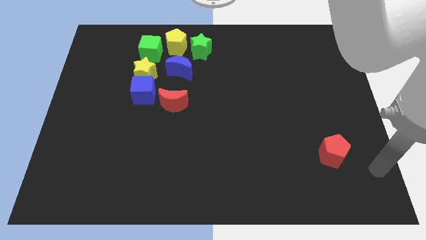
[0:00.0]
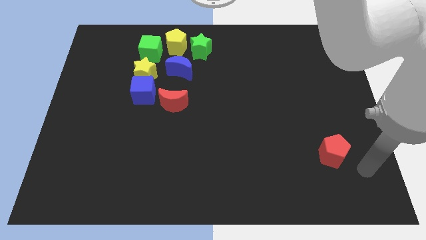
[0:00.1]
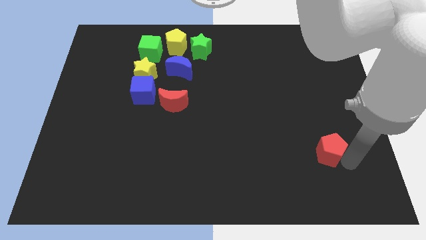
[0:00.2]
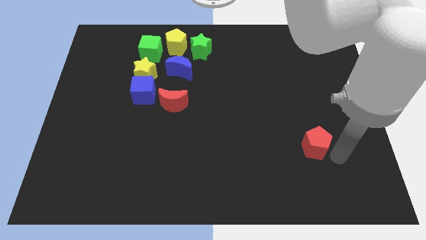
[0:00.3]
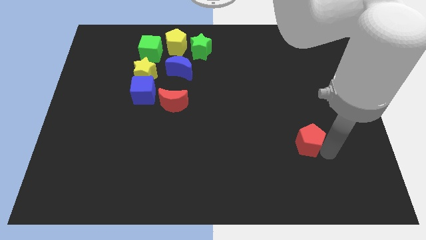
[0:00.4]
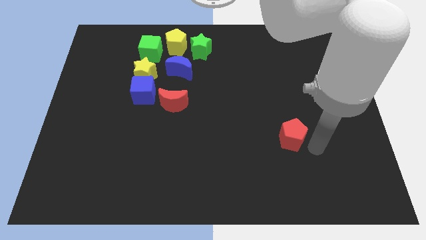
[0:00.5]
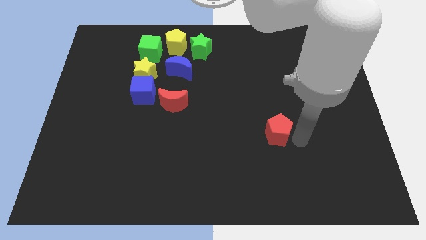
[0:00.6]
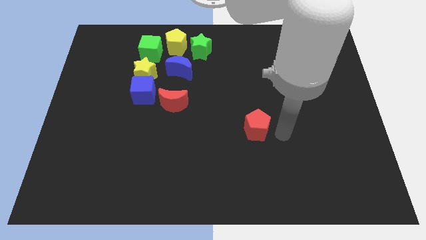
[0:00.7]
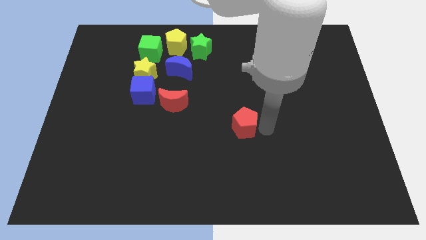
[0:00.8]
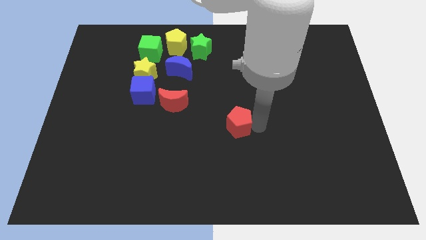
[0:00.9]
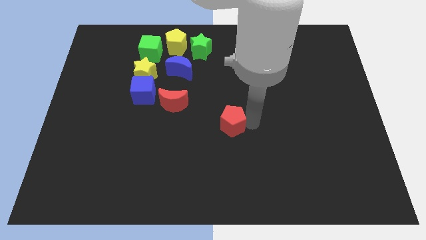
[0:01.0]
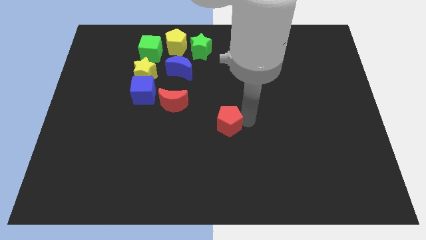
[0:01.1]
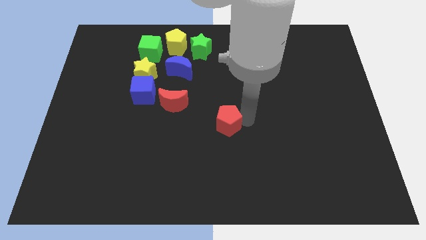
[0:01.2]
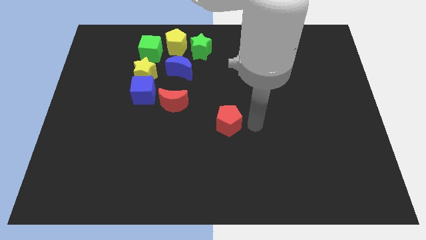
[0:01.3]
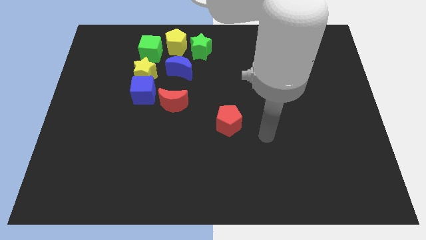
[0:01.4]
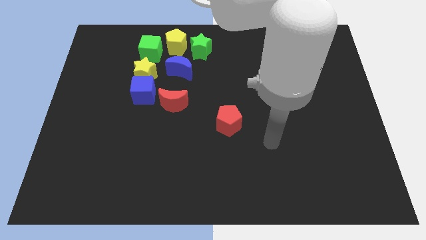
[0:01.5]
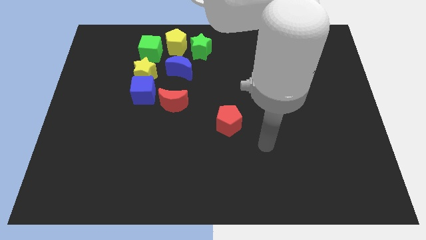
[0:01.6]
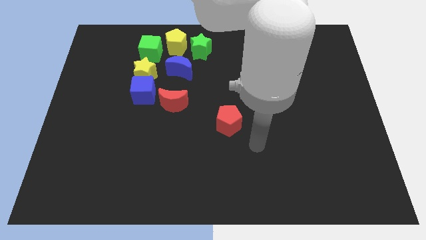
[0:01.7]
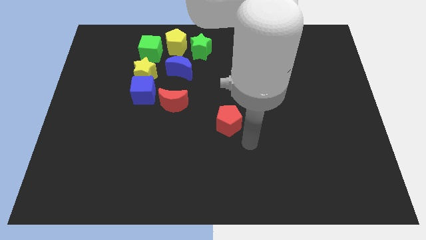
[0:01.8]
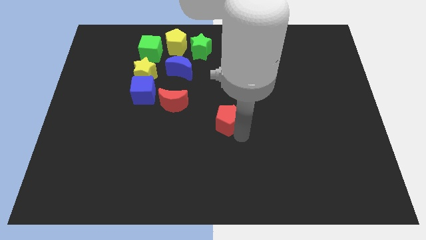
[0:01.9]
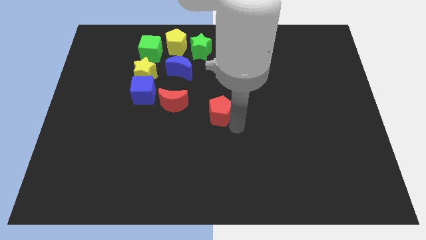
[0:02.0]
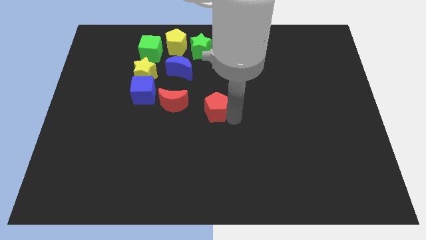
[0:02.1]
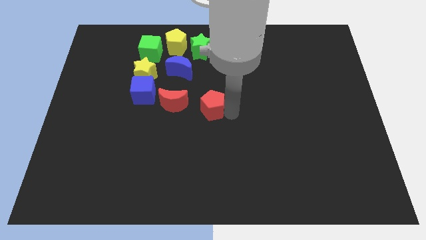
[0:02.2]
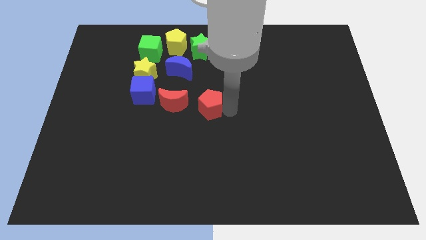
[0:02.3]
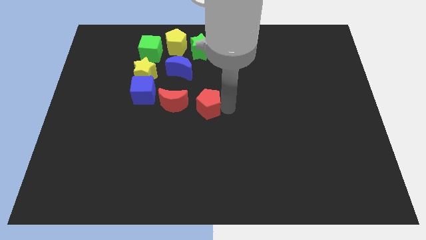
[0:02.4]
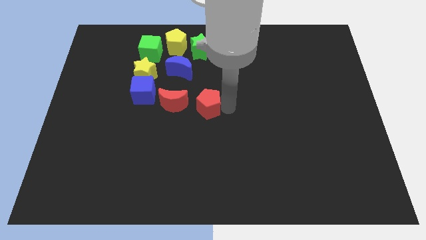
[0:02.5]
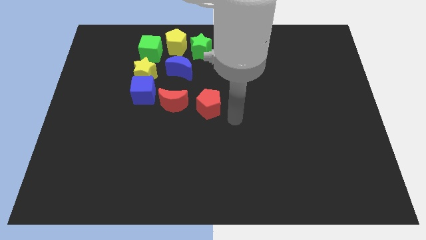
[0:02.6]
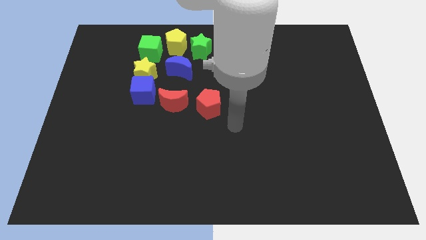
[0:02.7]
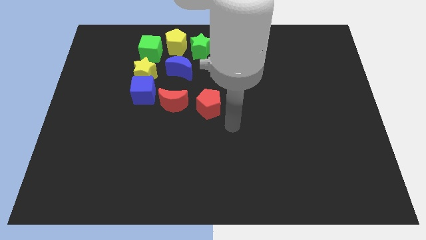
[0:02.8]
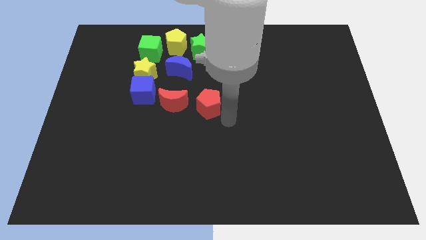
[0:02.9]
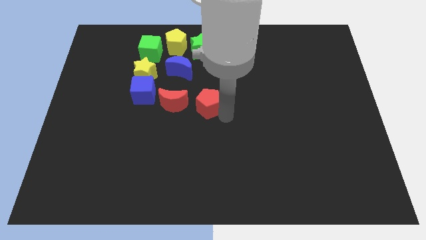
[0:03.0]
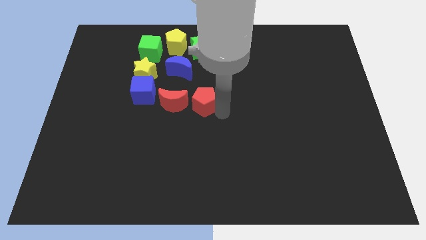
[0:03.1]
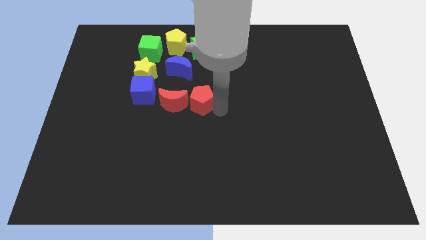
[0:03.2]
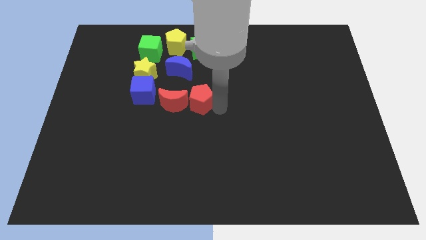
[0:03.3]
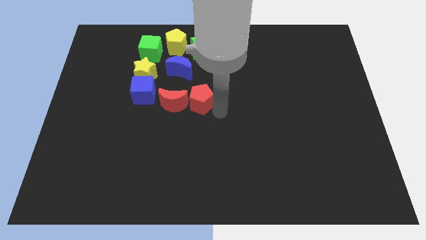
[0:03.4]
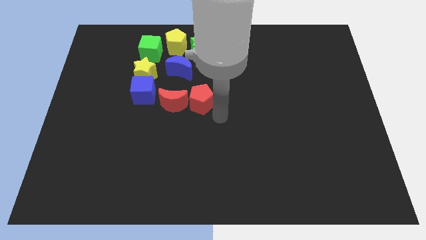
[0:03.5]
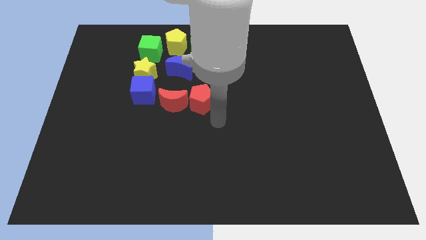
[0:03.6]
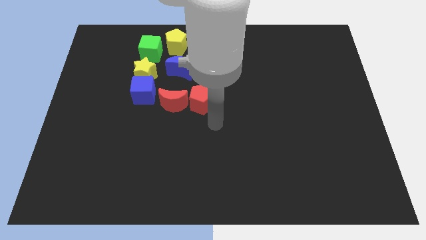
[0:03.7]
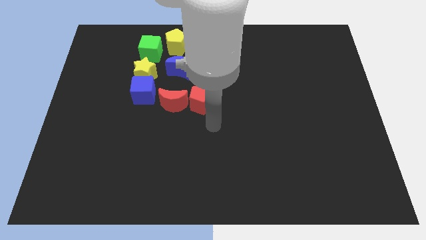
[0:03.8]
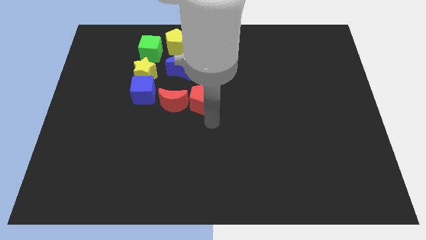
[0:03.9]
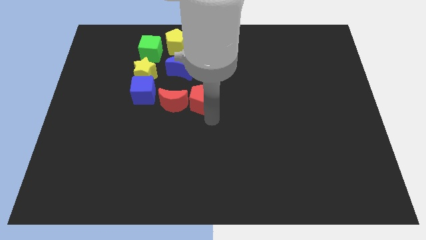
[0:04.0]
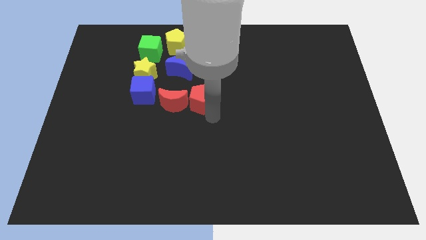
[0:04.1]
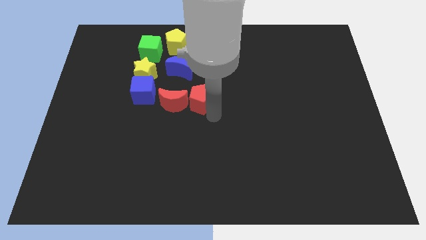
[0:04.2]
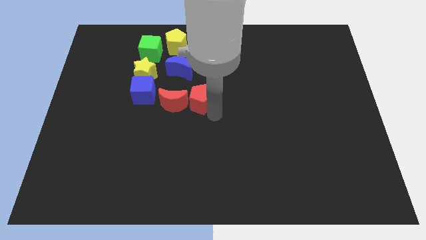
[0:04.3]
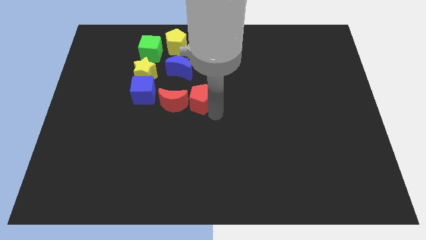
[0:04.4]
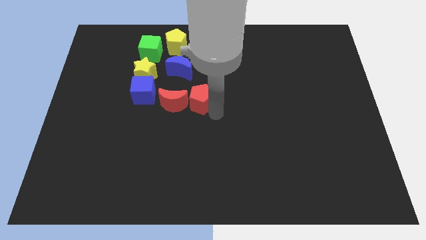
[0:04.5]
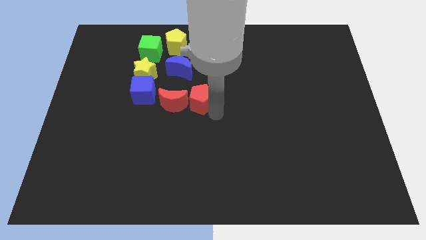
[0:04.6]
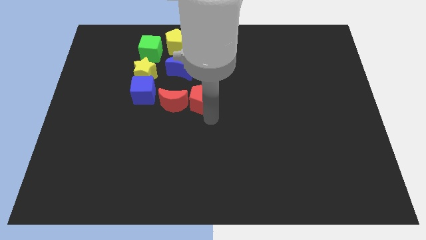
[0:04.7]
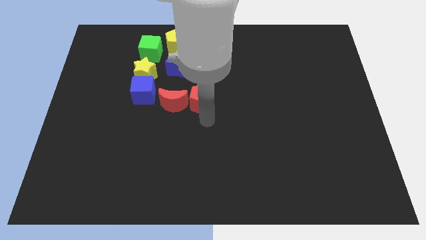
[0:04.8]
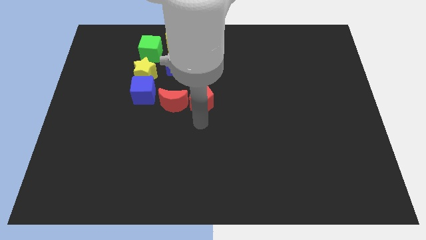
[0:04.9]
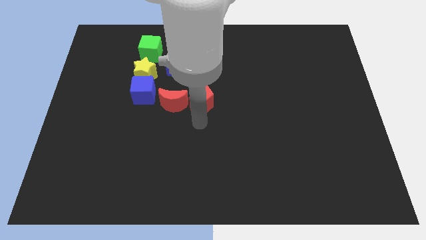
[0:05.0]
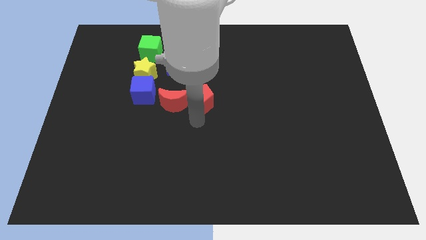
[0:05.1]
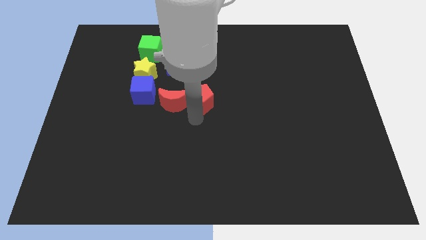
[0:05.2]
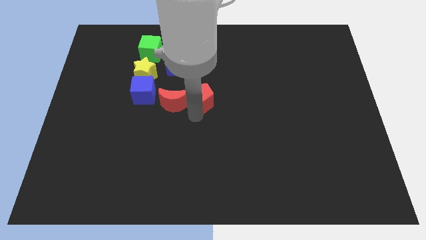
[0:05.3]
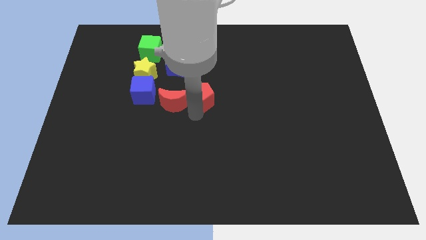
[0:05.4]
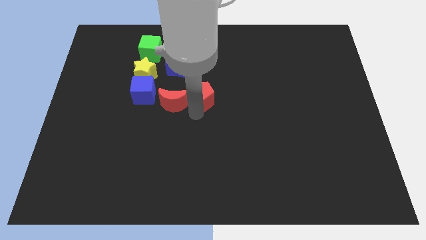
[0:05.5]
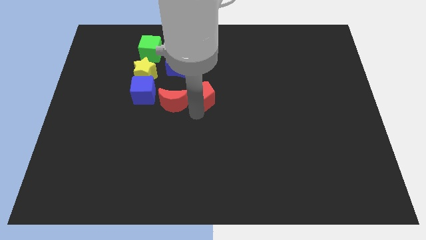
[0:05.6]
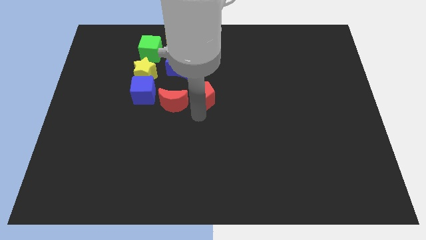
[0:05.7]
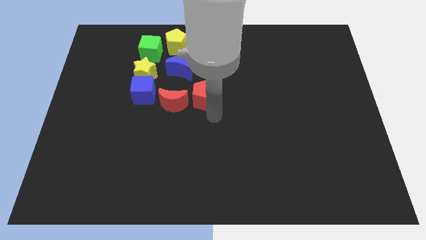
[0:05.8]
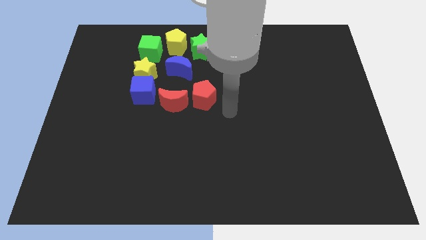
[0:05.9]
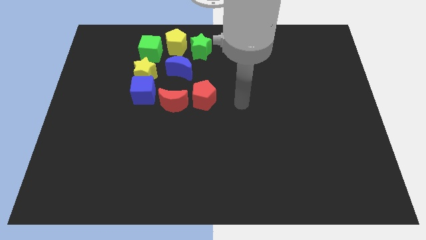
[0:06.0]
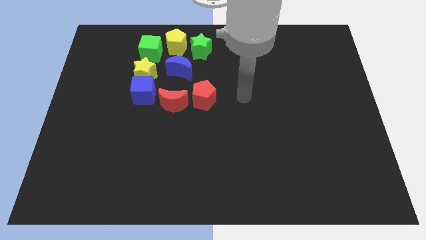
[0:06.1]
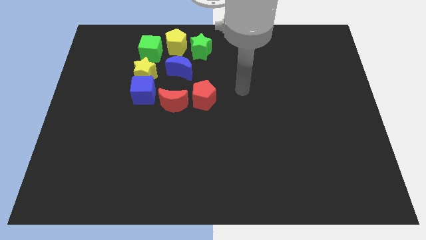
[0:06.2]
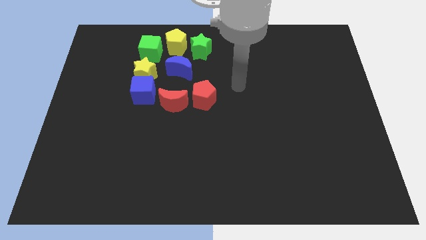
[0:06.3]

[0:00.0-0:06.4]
move the red pentagon to the right of the red crescent

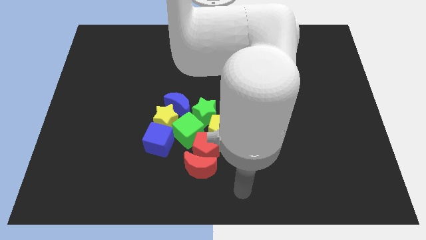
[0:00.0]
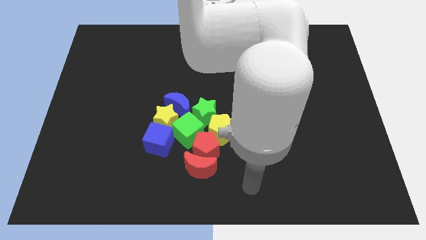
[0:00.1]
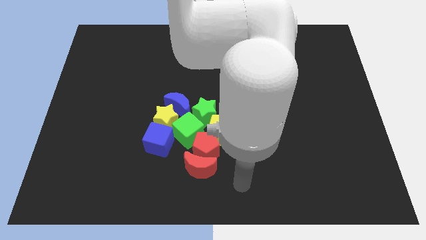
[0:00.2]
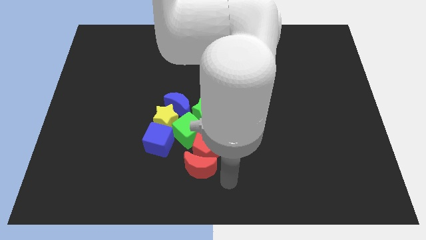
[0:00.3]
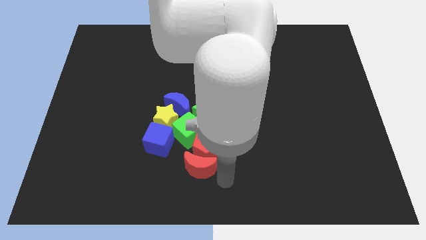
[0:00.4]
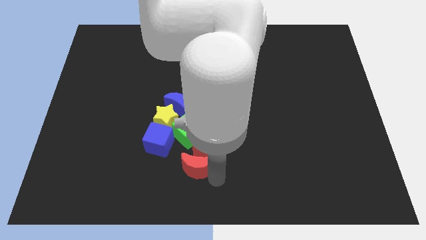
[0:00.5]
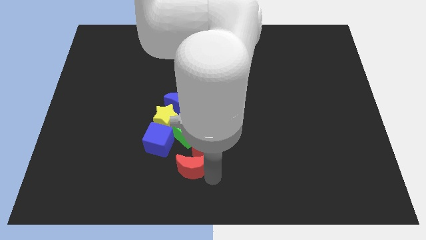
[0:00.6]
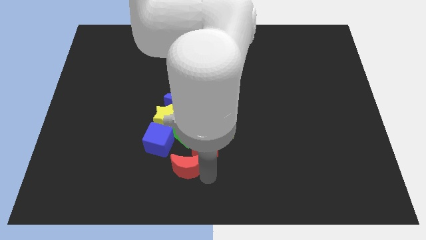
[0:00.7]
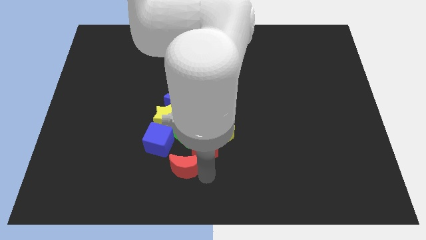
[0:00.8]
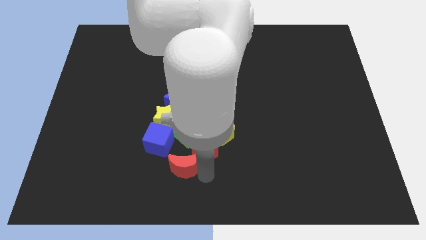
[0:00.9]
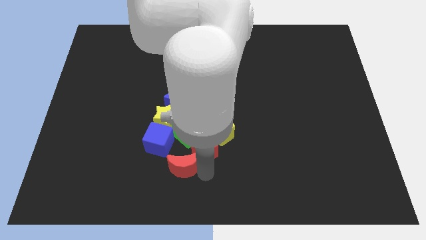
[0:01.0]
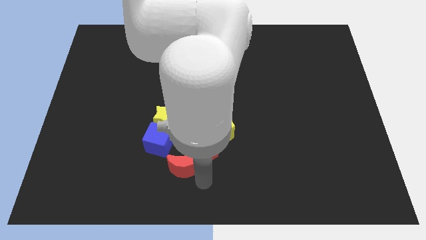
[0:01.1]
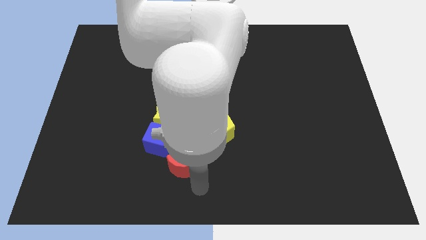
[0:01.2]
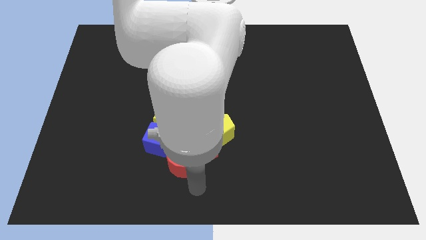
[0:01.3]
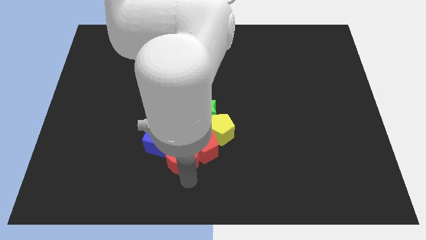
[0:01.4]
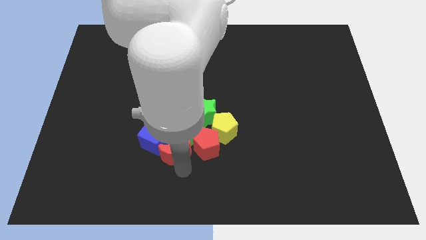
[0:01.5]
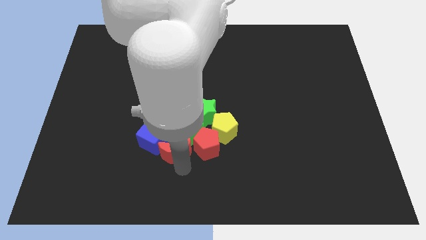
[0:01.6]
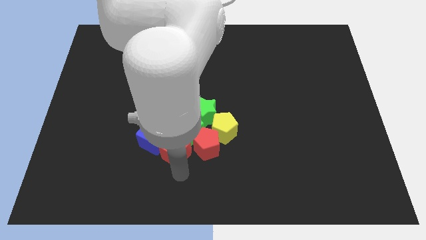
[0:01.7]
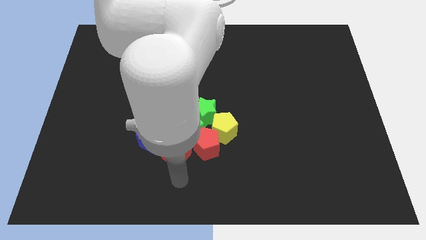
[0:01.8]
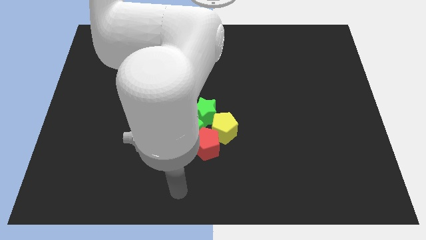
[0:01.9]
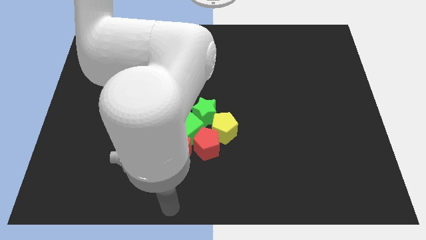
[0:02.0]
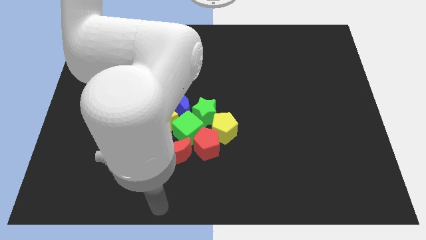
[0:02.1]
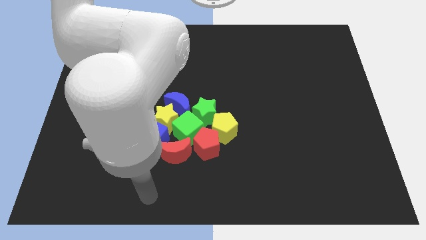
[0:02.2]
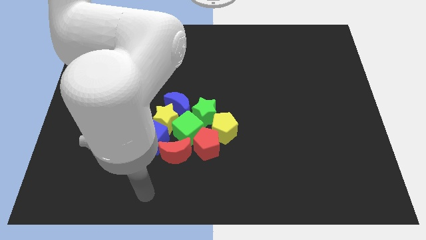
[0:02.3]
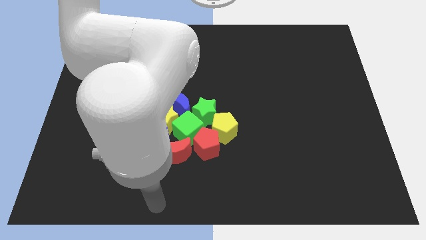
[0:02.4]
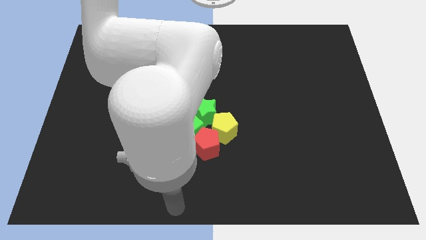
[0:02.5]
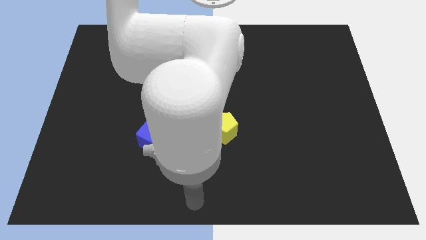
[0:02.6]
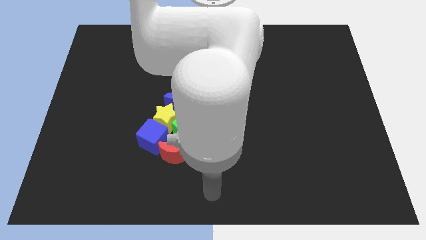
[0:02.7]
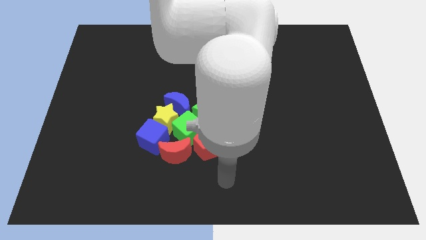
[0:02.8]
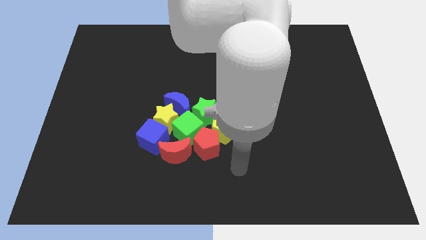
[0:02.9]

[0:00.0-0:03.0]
push the red crescent into the blue and green cubes
